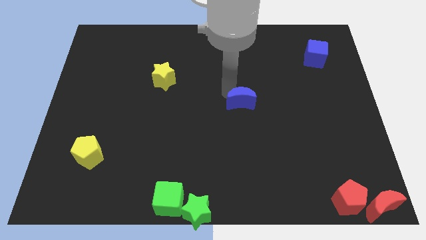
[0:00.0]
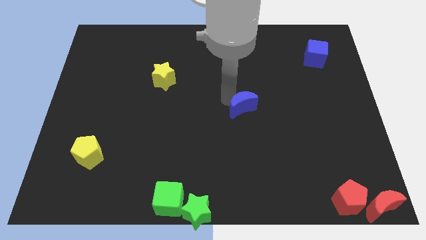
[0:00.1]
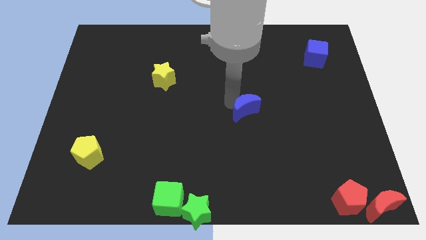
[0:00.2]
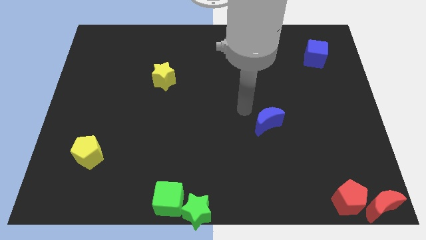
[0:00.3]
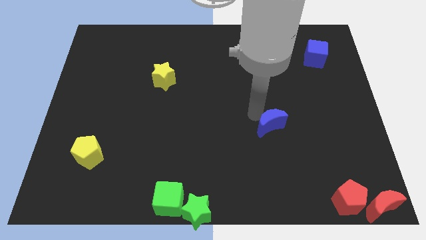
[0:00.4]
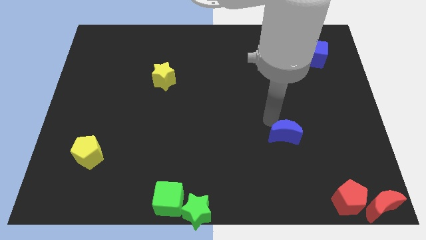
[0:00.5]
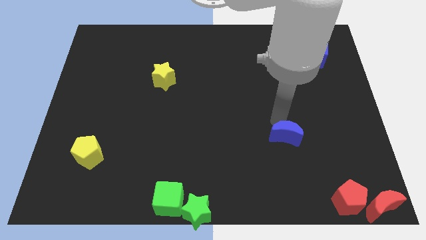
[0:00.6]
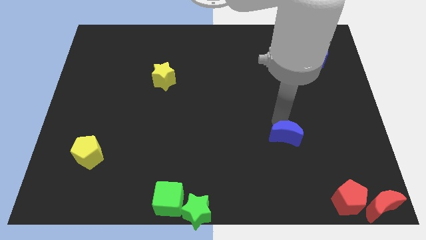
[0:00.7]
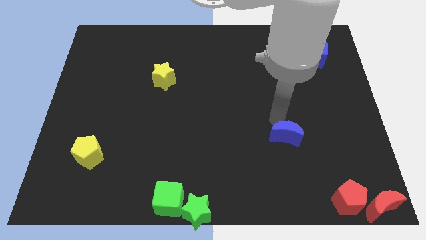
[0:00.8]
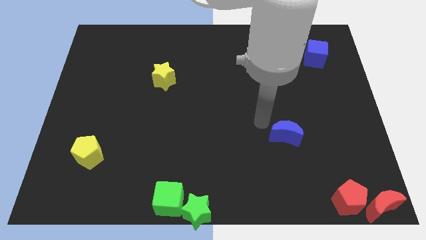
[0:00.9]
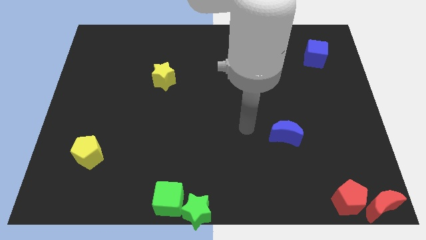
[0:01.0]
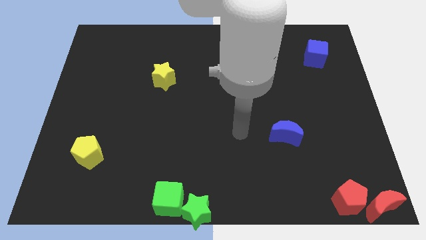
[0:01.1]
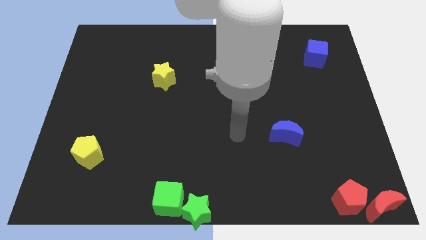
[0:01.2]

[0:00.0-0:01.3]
push the blue moon towards the bottom right corner of the board

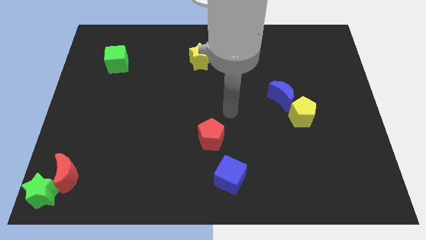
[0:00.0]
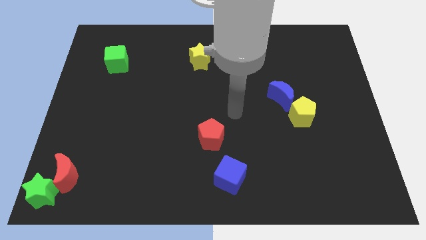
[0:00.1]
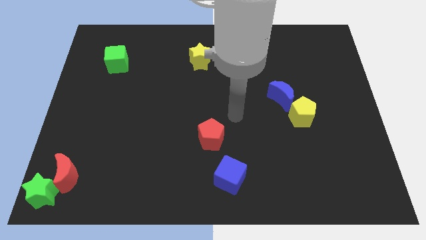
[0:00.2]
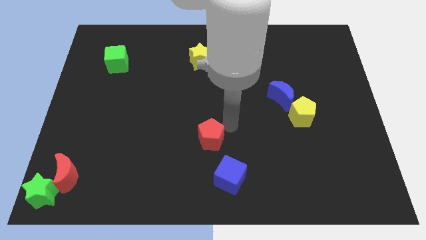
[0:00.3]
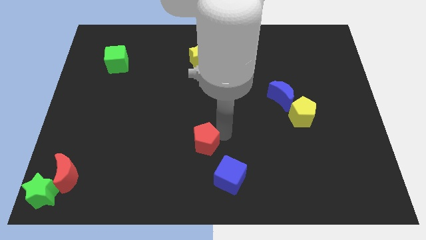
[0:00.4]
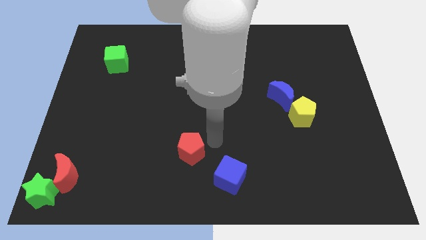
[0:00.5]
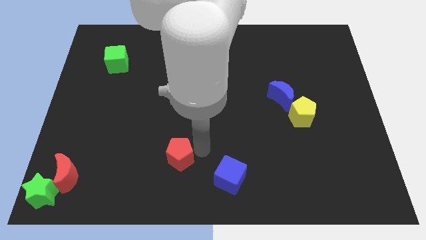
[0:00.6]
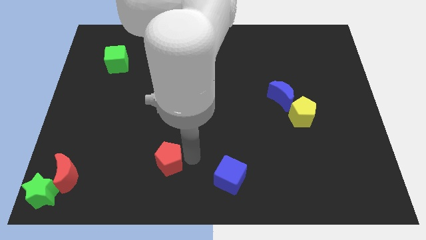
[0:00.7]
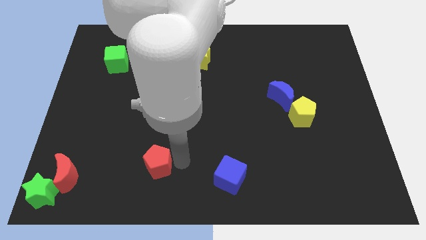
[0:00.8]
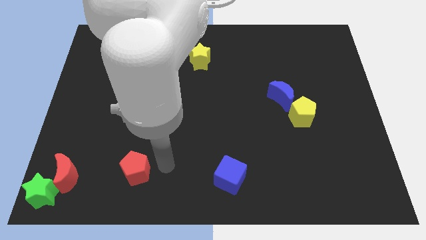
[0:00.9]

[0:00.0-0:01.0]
place red pentagon to the left of blue cube

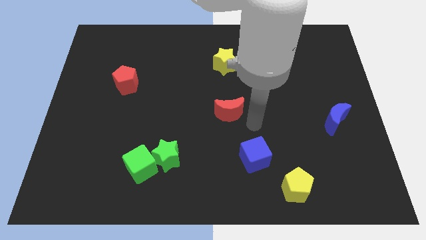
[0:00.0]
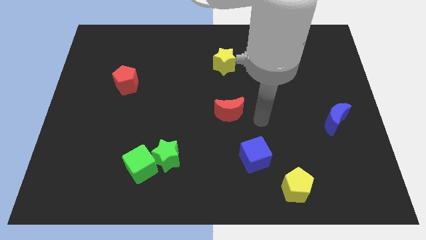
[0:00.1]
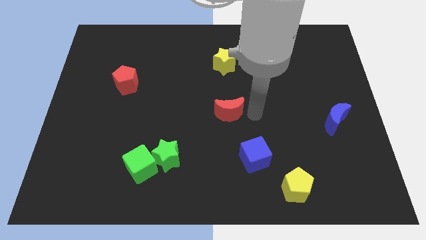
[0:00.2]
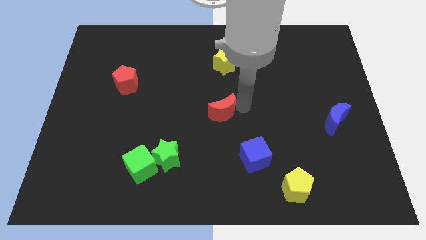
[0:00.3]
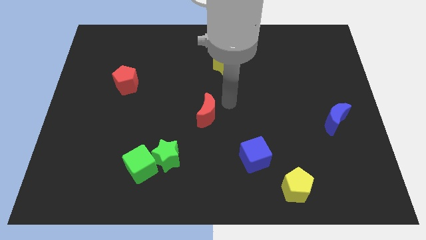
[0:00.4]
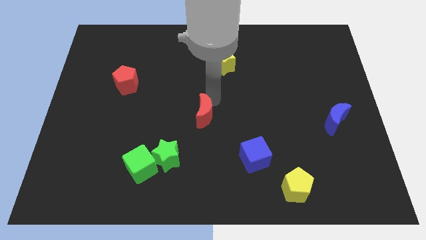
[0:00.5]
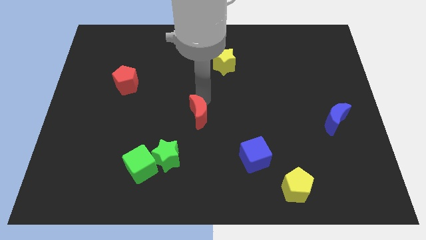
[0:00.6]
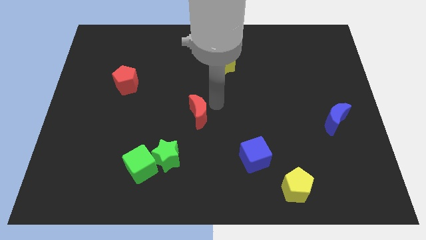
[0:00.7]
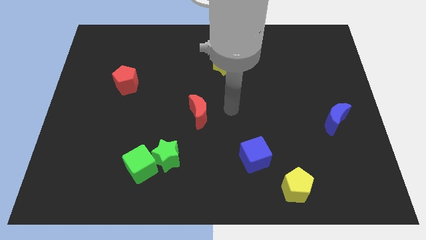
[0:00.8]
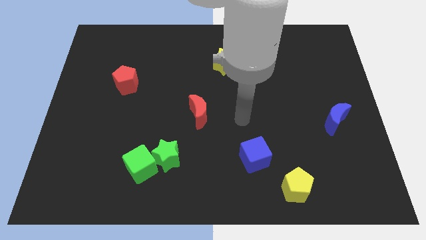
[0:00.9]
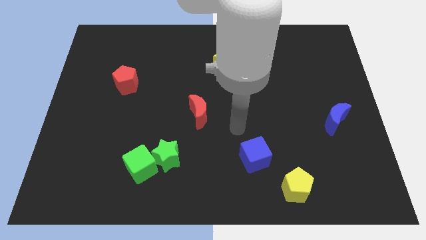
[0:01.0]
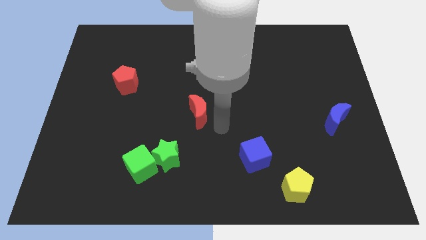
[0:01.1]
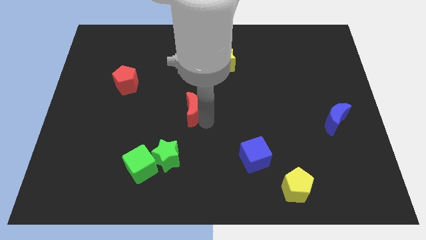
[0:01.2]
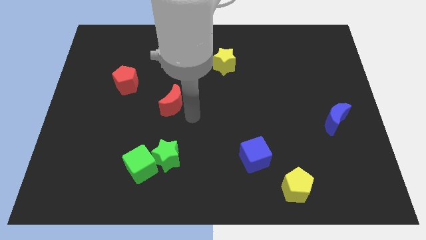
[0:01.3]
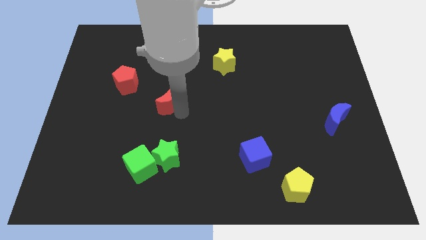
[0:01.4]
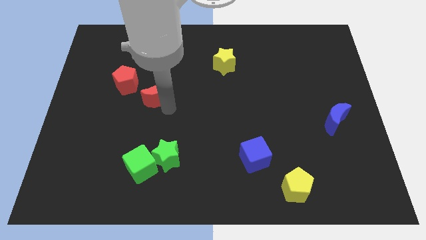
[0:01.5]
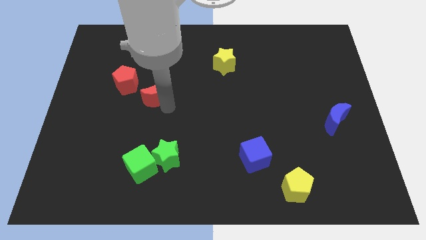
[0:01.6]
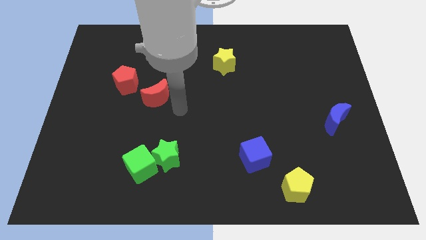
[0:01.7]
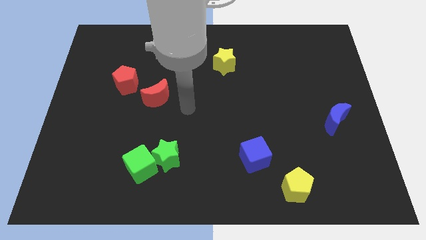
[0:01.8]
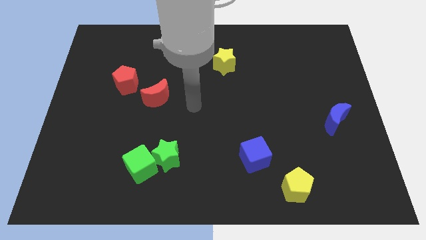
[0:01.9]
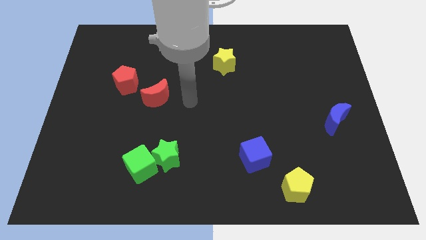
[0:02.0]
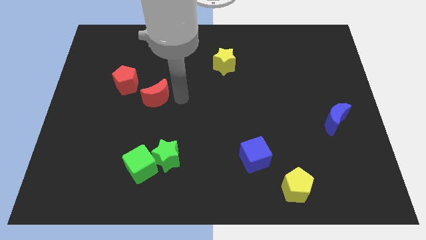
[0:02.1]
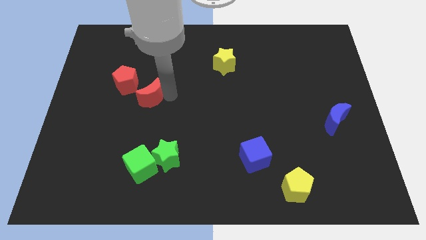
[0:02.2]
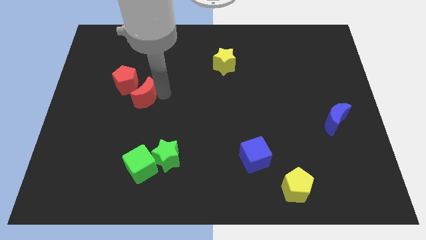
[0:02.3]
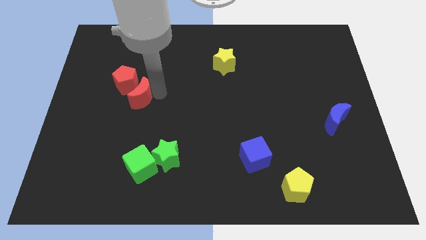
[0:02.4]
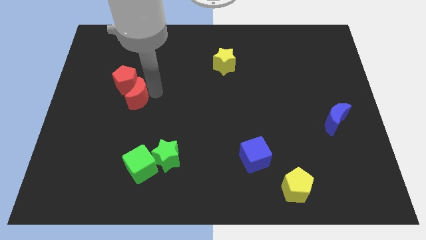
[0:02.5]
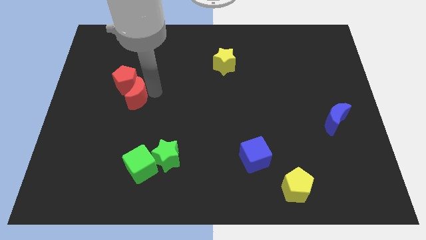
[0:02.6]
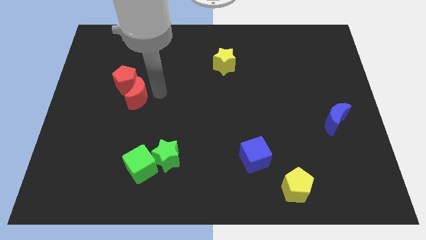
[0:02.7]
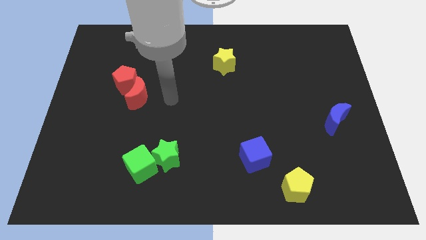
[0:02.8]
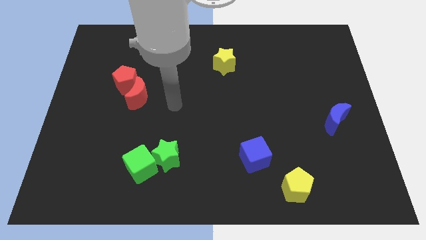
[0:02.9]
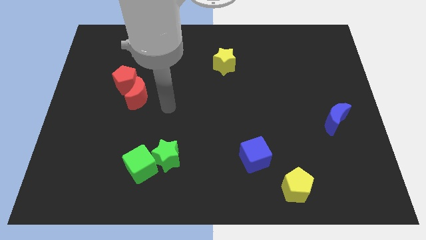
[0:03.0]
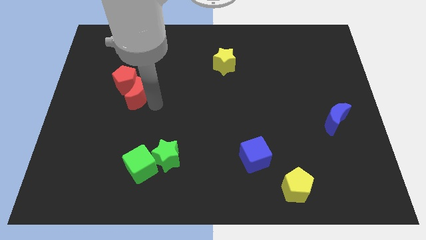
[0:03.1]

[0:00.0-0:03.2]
push red moon into red pentagon

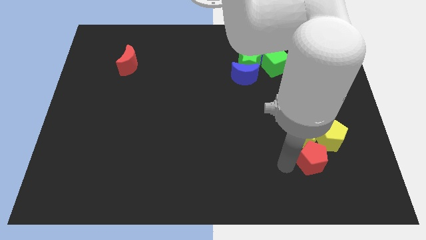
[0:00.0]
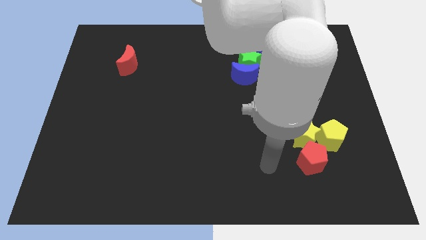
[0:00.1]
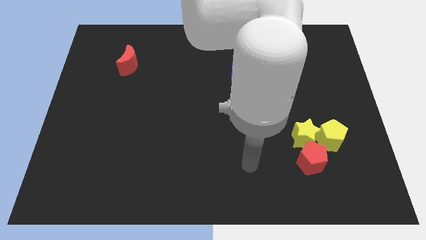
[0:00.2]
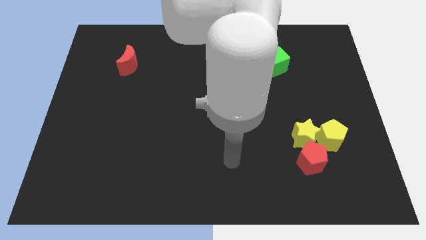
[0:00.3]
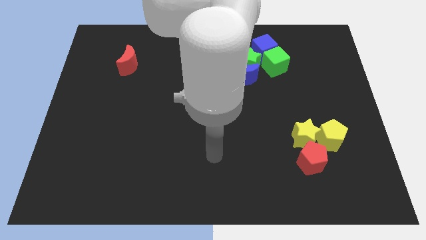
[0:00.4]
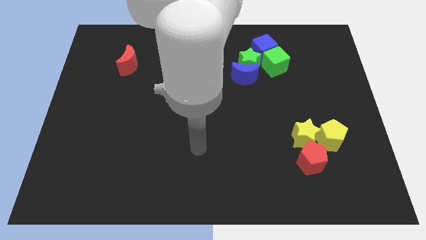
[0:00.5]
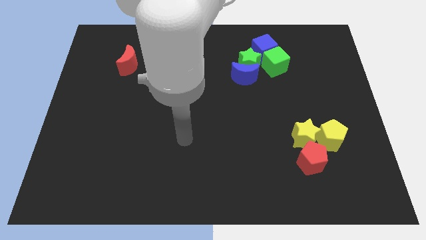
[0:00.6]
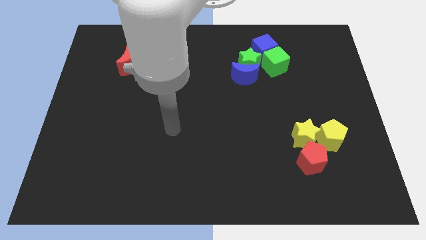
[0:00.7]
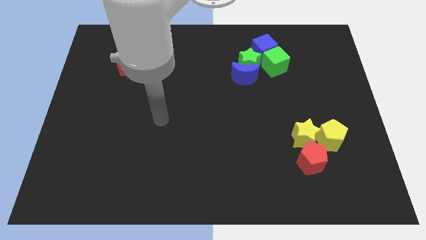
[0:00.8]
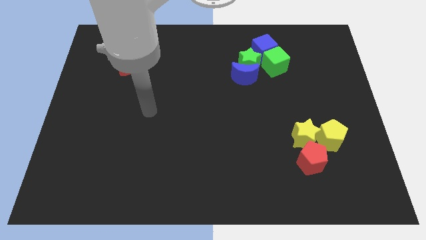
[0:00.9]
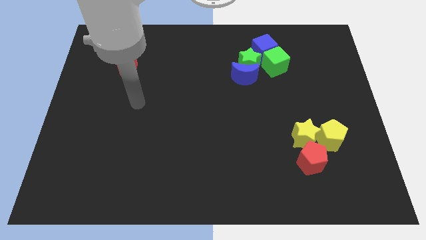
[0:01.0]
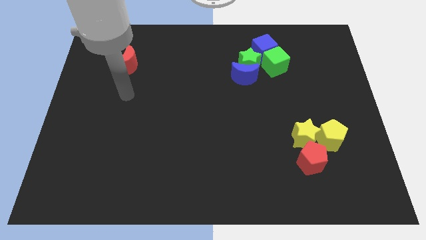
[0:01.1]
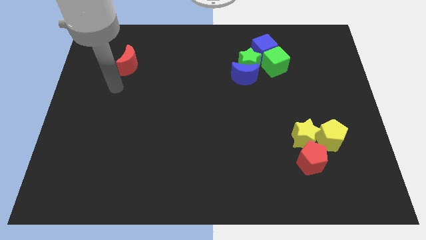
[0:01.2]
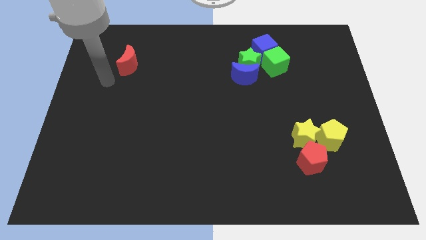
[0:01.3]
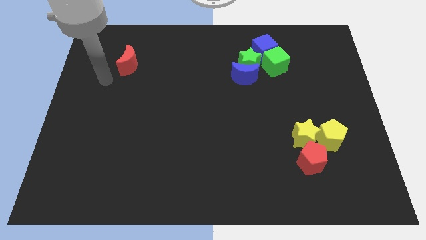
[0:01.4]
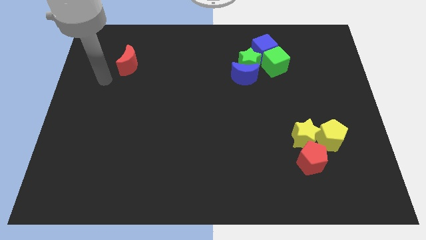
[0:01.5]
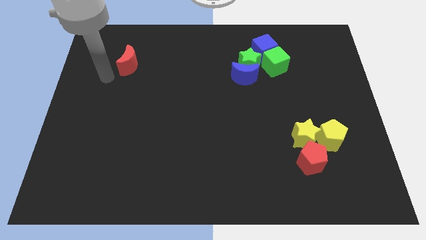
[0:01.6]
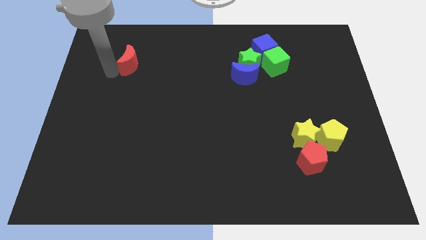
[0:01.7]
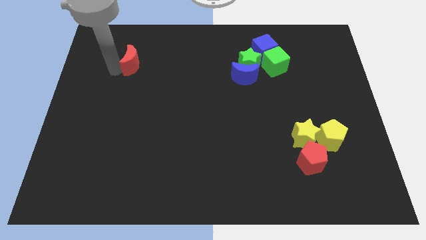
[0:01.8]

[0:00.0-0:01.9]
move your arm near red moon

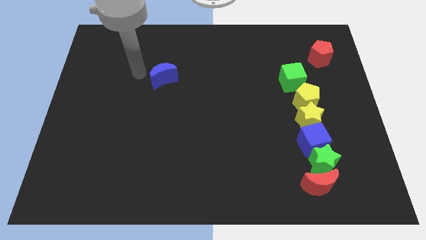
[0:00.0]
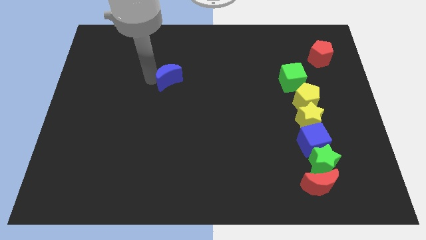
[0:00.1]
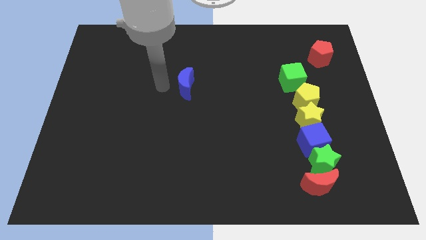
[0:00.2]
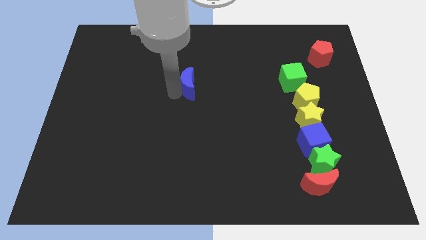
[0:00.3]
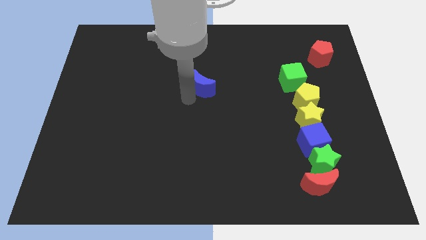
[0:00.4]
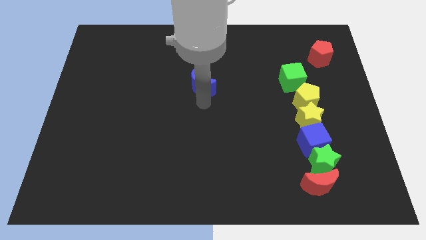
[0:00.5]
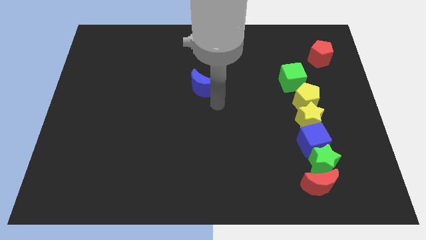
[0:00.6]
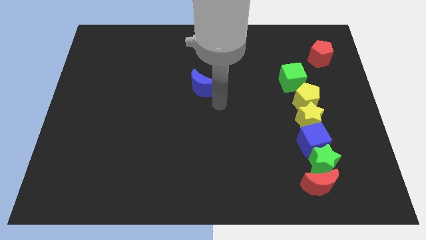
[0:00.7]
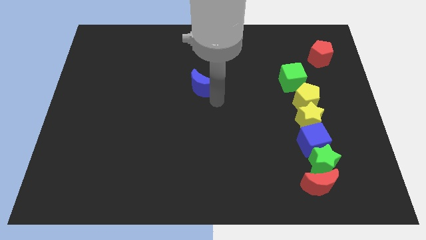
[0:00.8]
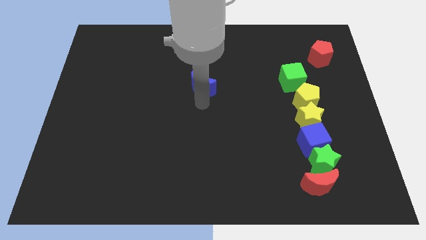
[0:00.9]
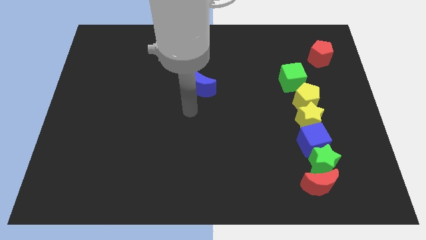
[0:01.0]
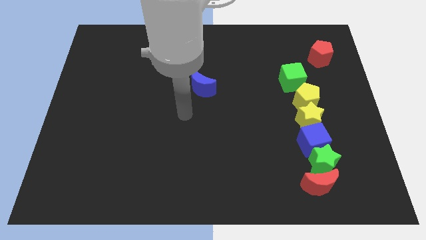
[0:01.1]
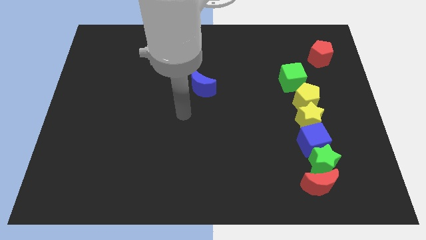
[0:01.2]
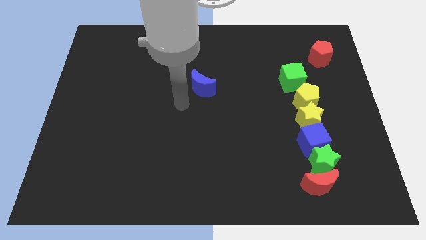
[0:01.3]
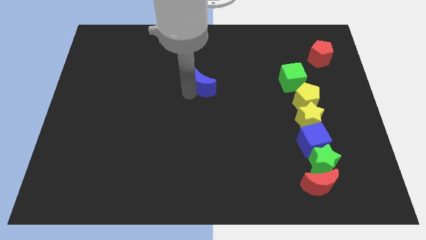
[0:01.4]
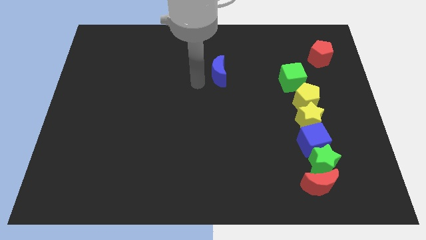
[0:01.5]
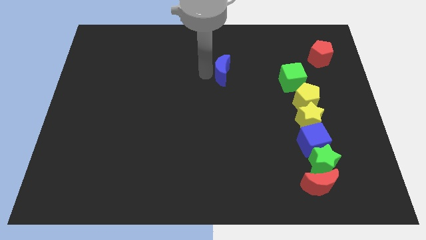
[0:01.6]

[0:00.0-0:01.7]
slide the blue moon towards green cube

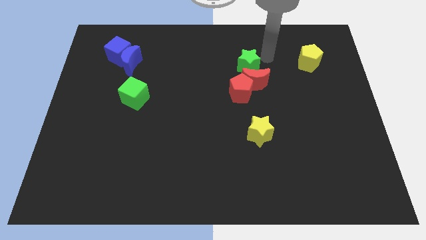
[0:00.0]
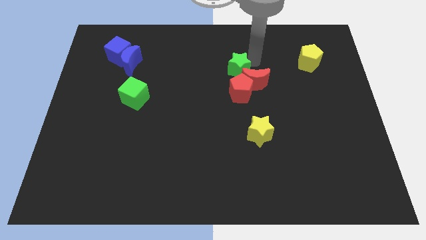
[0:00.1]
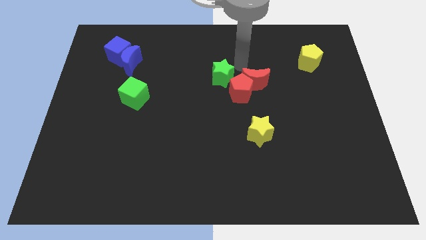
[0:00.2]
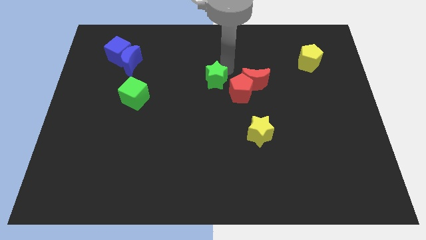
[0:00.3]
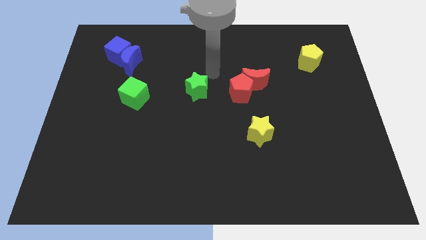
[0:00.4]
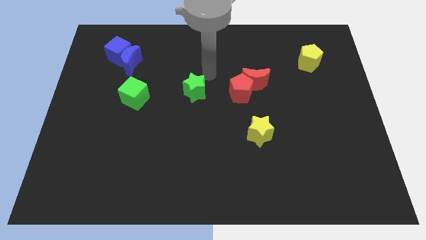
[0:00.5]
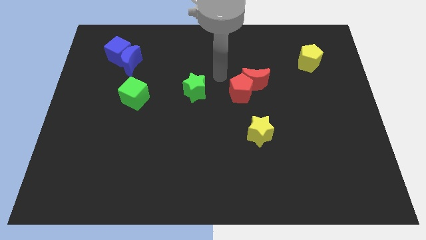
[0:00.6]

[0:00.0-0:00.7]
place green star beside red pentagon
